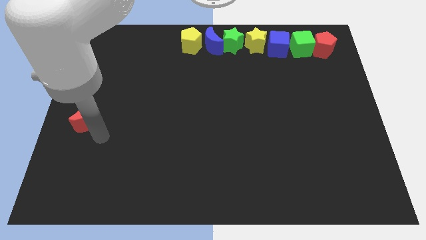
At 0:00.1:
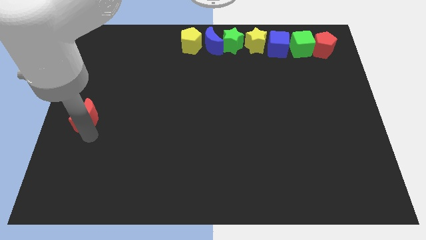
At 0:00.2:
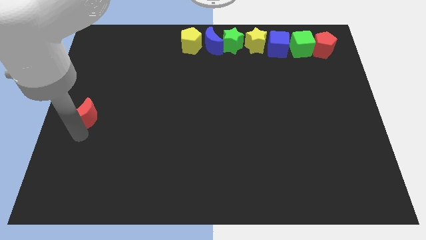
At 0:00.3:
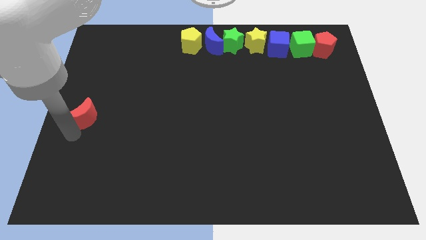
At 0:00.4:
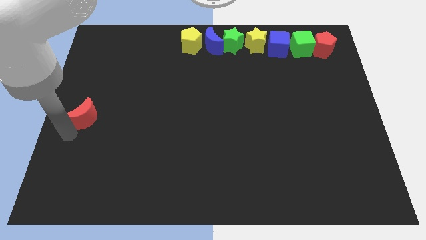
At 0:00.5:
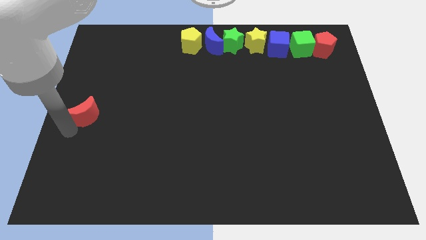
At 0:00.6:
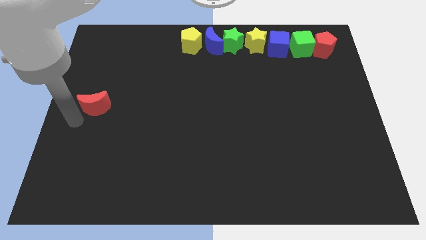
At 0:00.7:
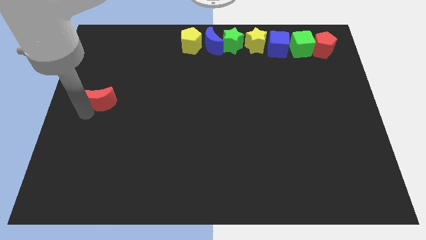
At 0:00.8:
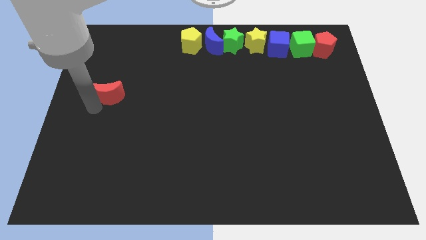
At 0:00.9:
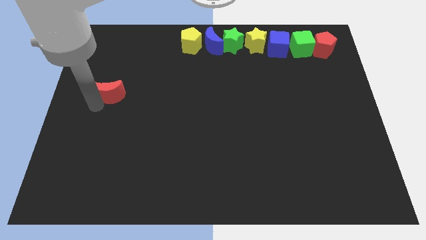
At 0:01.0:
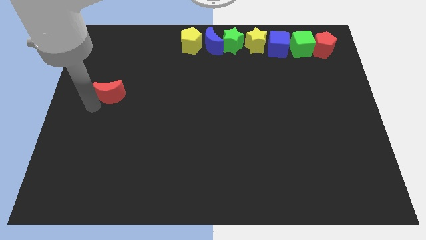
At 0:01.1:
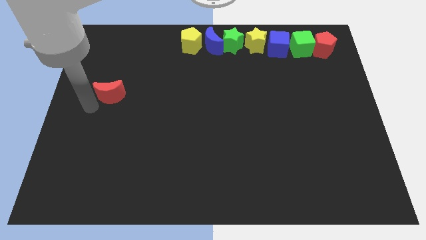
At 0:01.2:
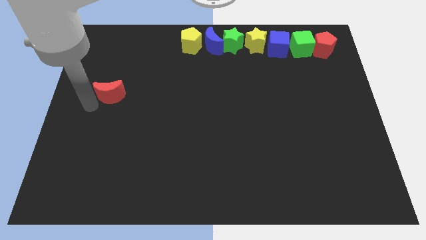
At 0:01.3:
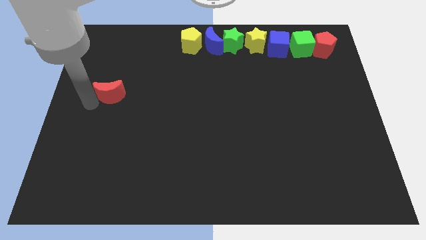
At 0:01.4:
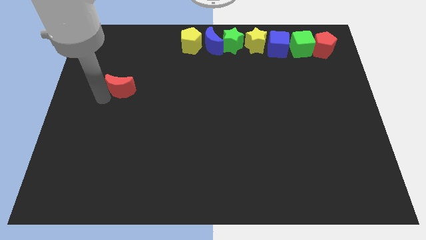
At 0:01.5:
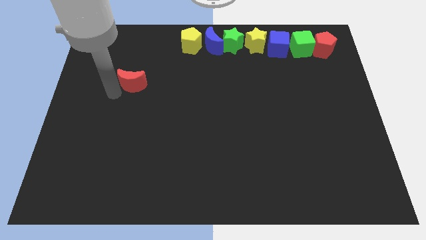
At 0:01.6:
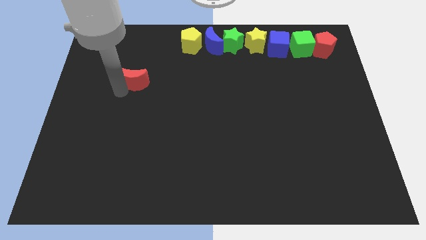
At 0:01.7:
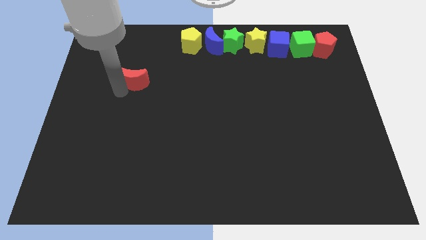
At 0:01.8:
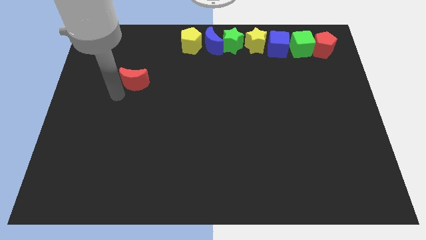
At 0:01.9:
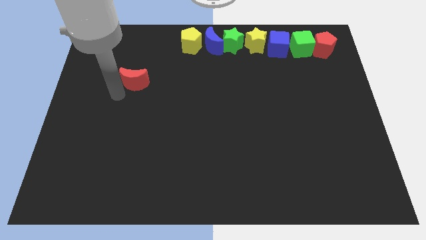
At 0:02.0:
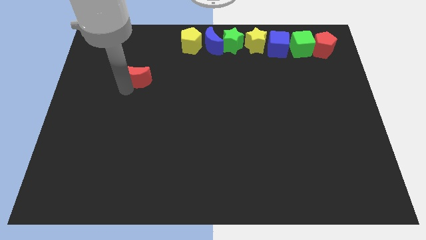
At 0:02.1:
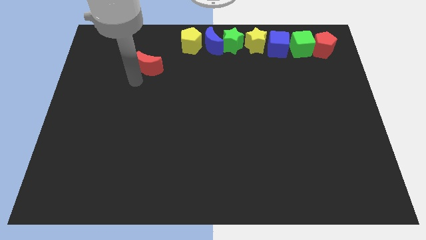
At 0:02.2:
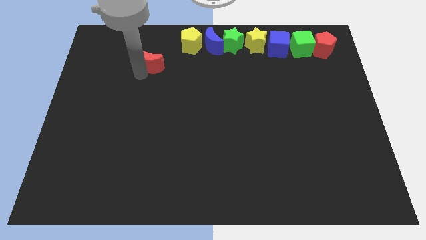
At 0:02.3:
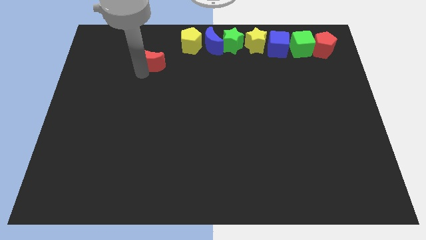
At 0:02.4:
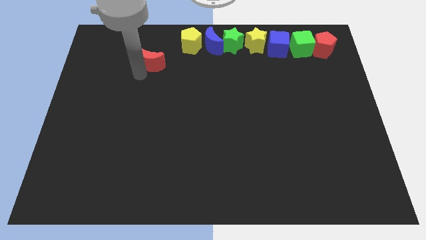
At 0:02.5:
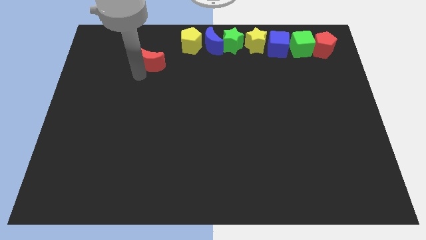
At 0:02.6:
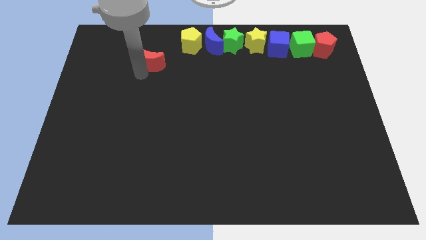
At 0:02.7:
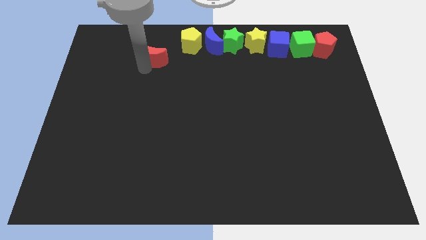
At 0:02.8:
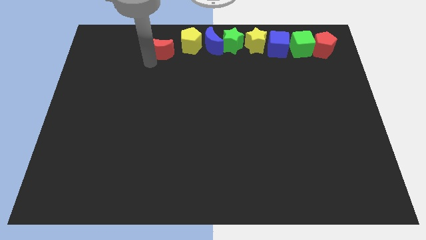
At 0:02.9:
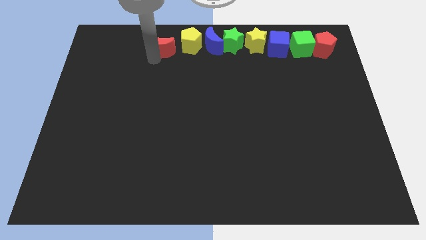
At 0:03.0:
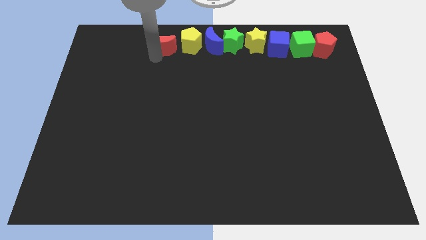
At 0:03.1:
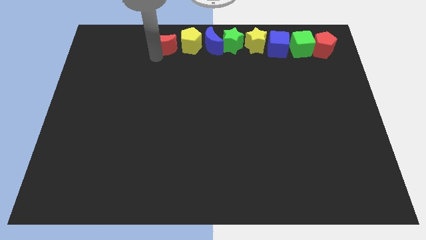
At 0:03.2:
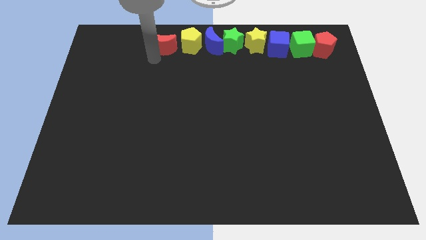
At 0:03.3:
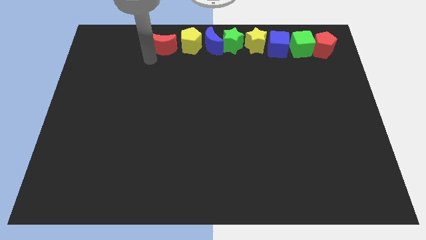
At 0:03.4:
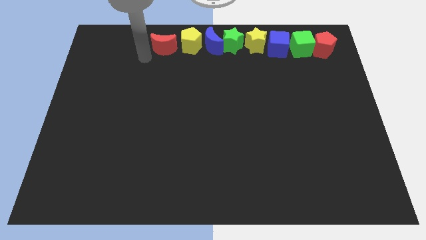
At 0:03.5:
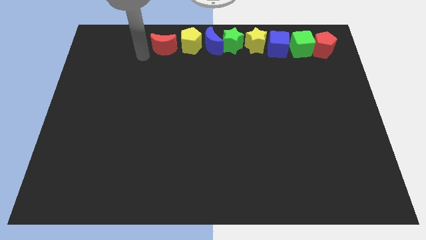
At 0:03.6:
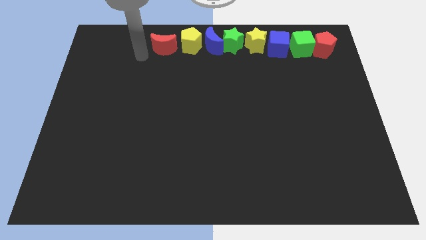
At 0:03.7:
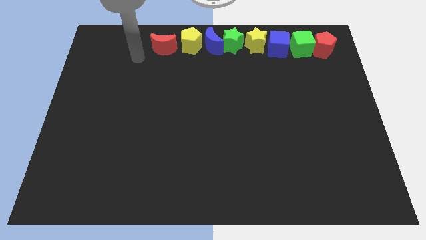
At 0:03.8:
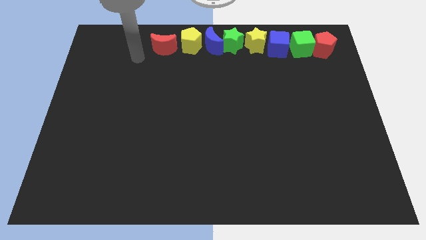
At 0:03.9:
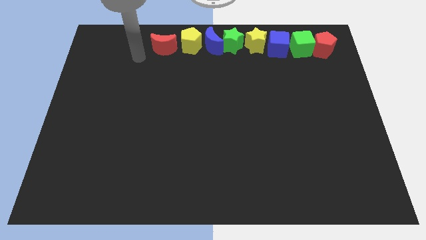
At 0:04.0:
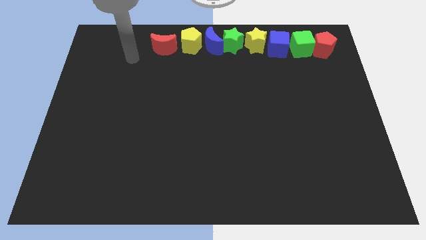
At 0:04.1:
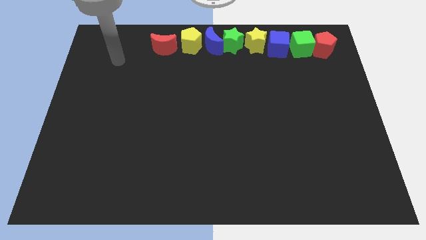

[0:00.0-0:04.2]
place the red moon to the left of the yellow pentagon to form a vertical line

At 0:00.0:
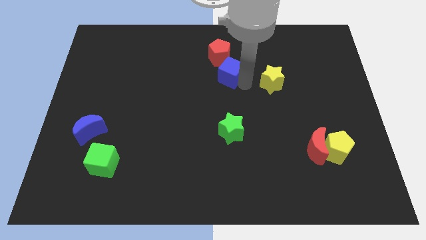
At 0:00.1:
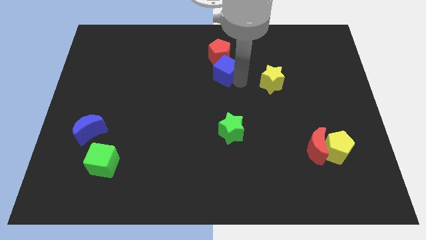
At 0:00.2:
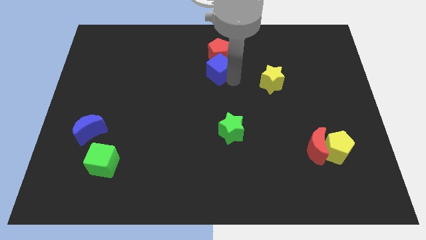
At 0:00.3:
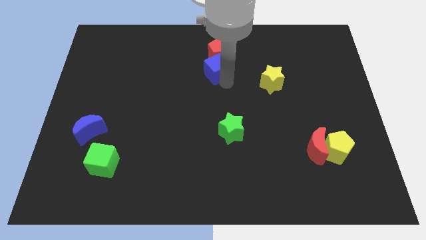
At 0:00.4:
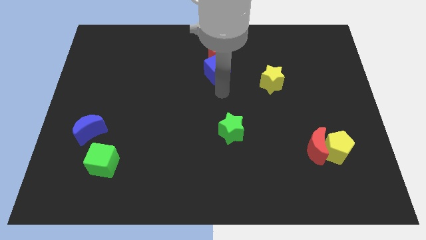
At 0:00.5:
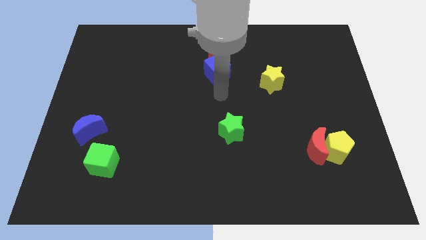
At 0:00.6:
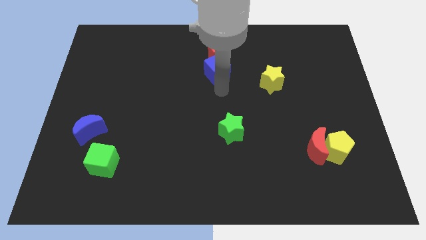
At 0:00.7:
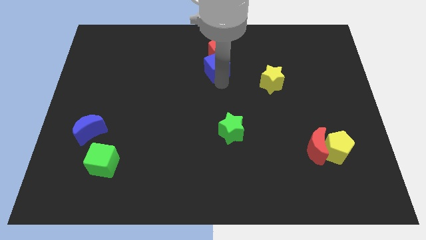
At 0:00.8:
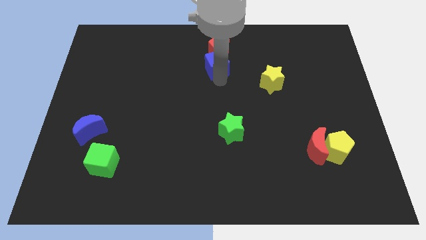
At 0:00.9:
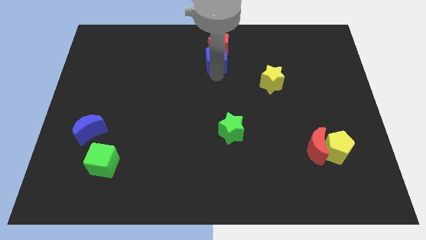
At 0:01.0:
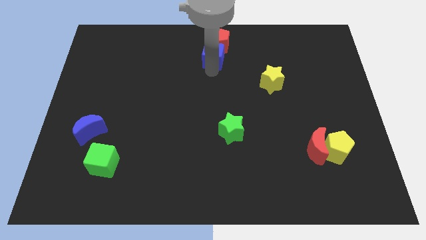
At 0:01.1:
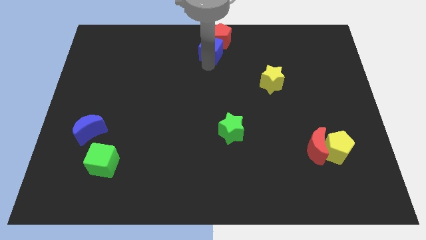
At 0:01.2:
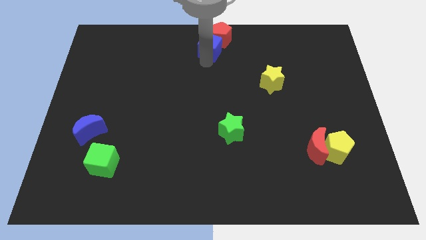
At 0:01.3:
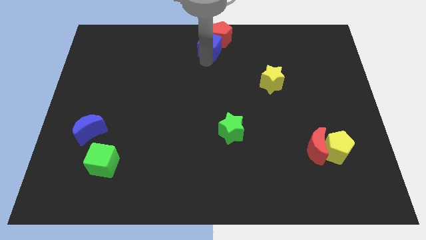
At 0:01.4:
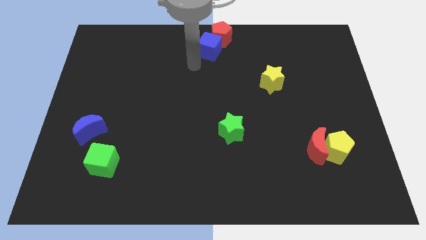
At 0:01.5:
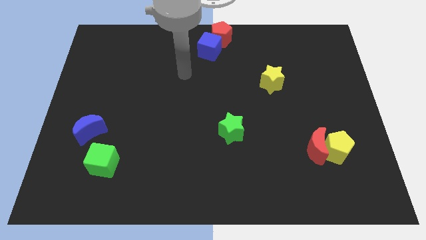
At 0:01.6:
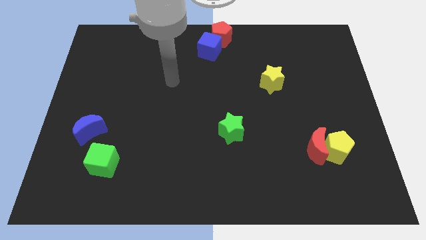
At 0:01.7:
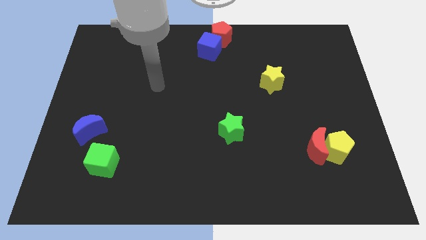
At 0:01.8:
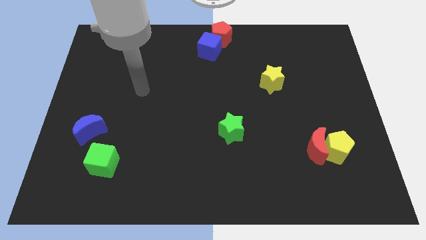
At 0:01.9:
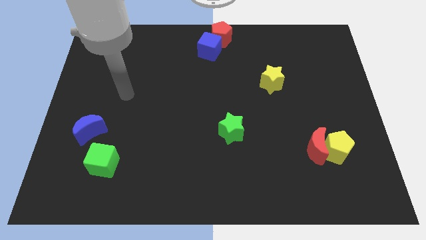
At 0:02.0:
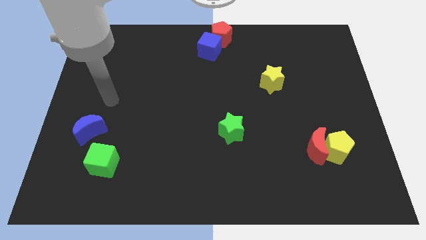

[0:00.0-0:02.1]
push blue cube along with red pentagon to the top center

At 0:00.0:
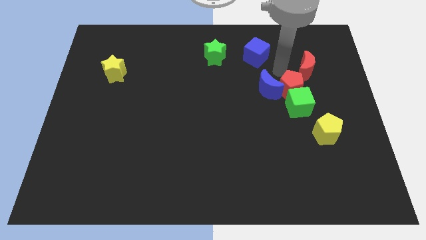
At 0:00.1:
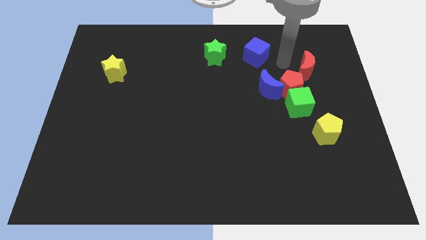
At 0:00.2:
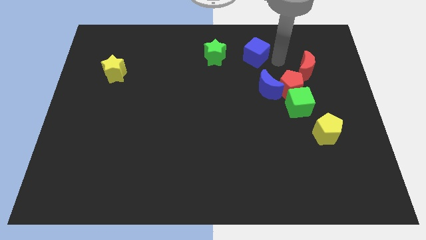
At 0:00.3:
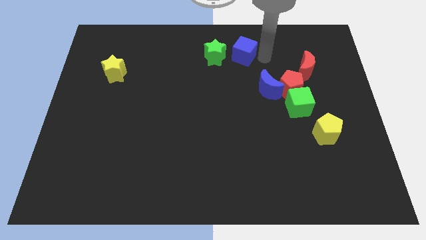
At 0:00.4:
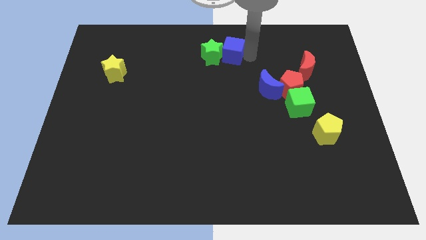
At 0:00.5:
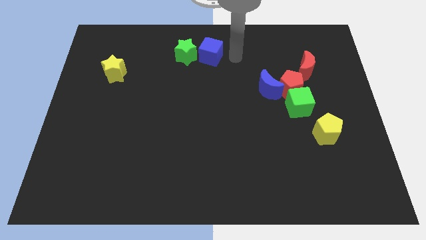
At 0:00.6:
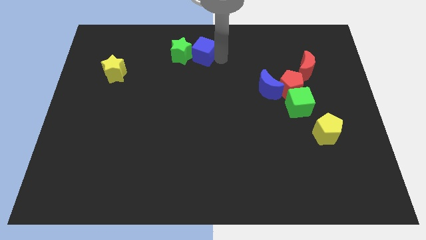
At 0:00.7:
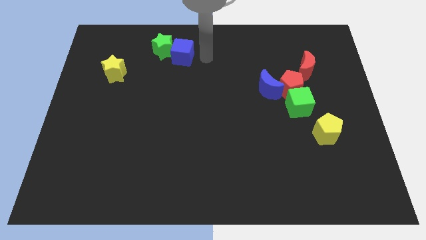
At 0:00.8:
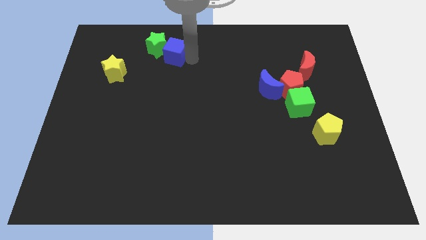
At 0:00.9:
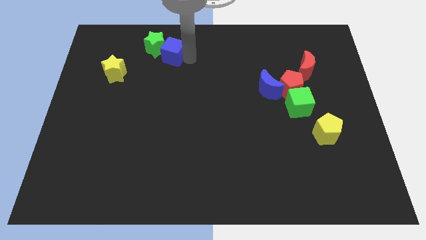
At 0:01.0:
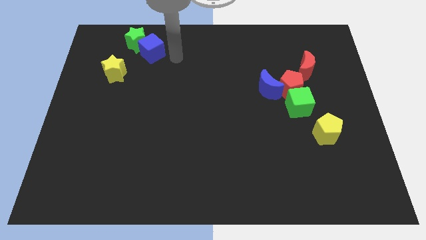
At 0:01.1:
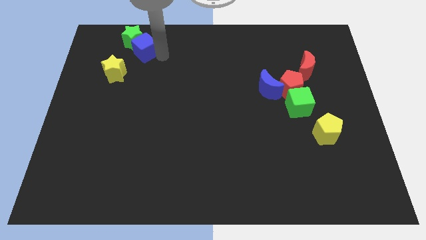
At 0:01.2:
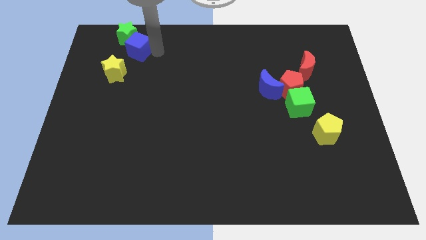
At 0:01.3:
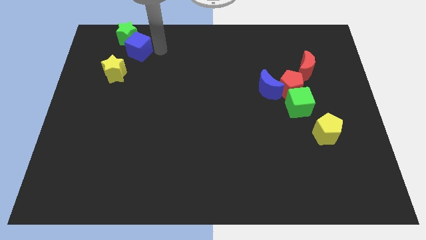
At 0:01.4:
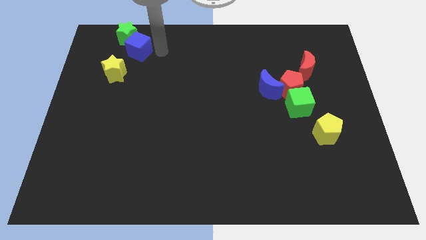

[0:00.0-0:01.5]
place blue cube to the top right of the yellow star

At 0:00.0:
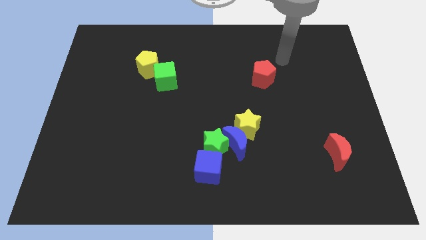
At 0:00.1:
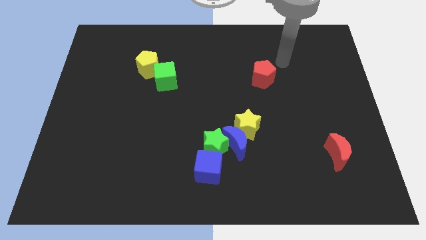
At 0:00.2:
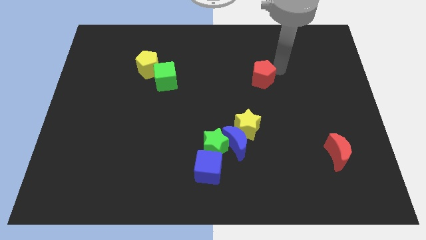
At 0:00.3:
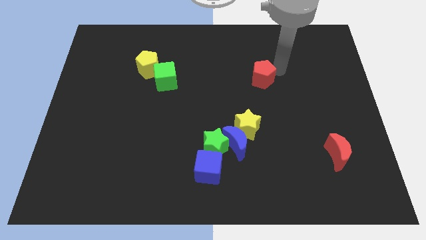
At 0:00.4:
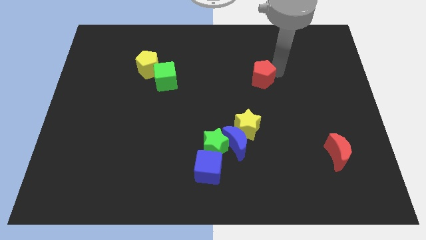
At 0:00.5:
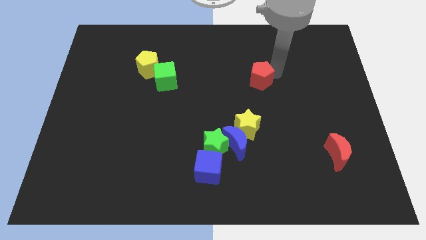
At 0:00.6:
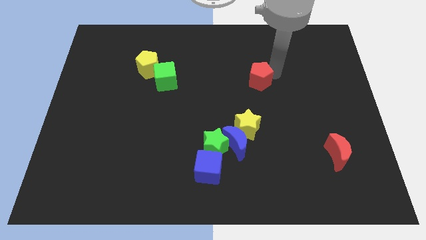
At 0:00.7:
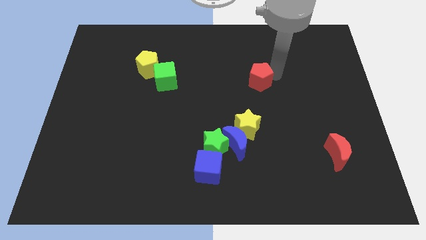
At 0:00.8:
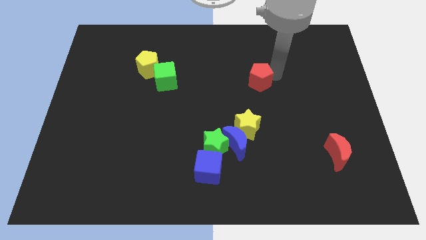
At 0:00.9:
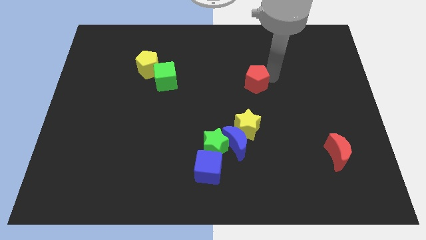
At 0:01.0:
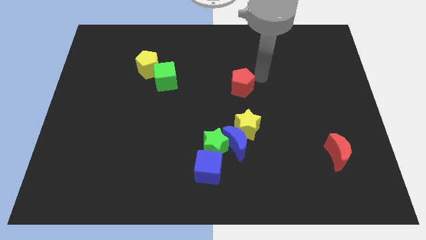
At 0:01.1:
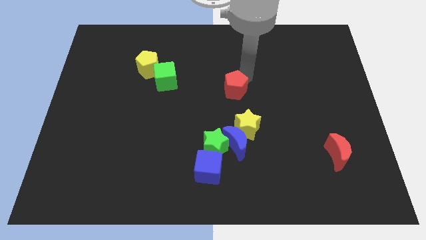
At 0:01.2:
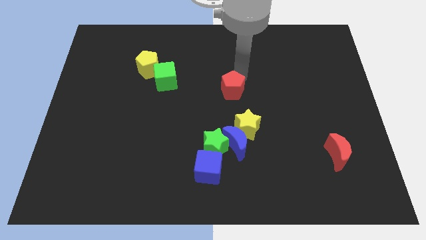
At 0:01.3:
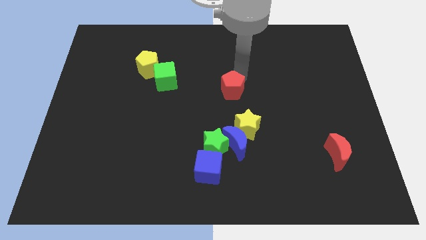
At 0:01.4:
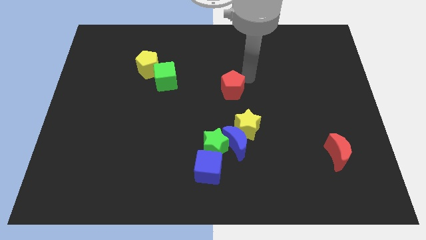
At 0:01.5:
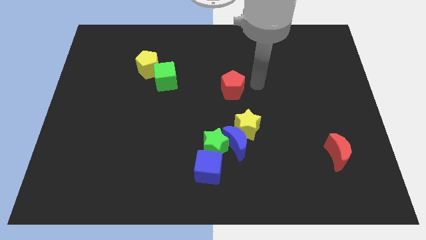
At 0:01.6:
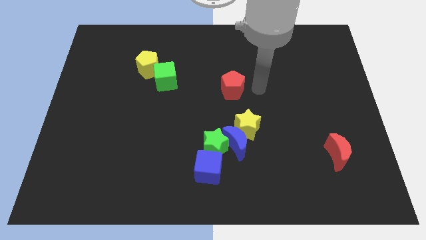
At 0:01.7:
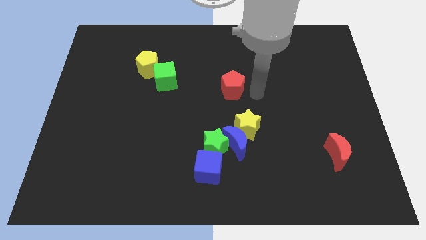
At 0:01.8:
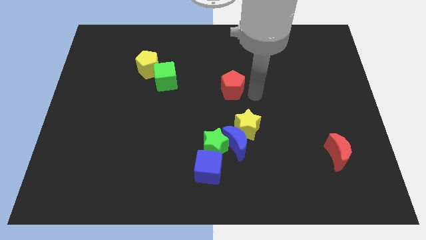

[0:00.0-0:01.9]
place red pentagon to the center of the board
